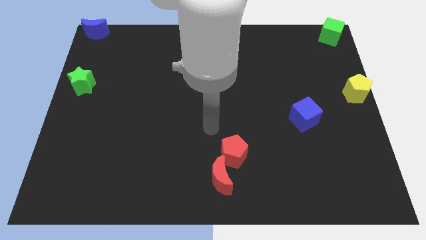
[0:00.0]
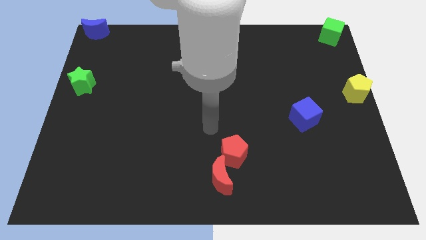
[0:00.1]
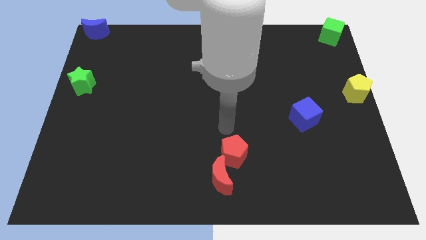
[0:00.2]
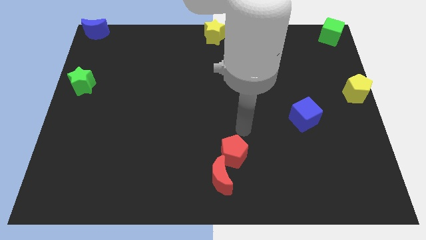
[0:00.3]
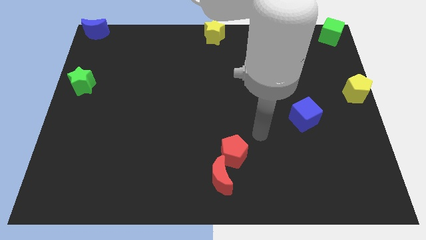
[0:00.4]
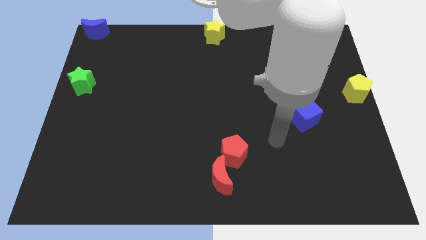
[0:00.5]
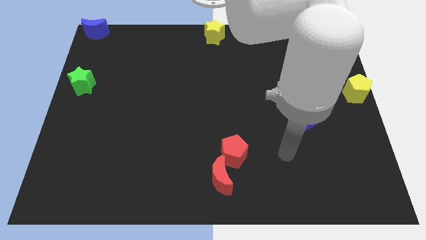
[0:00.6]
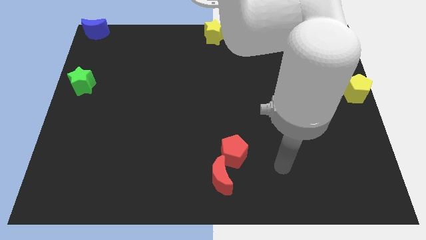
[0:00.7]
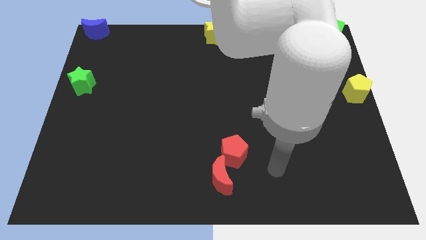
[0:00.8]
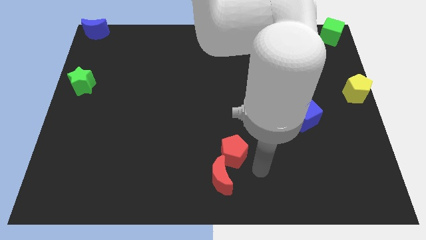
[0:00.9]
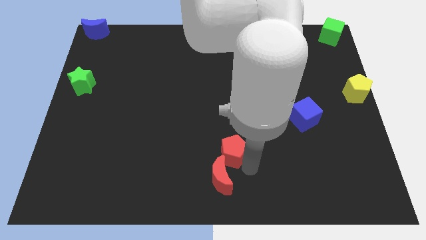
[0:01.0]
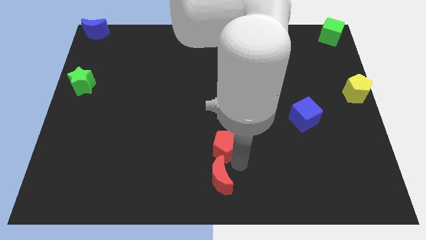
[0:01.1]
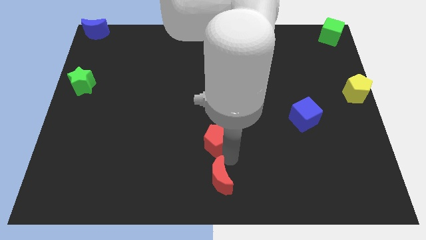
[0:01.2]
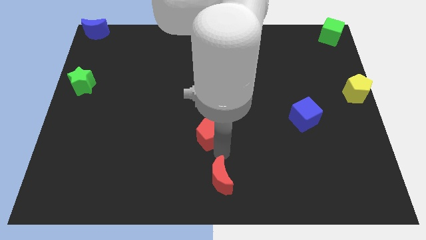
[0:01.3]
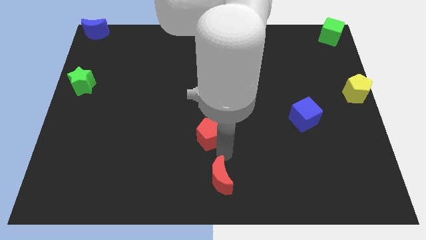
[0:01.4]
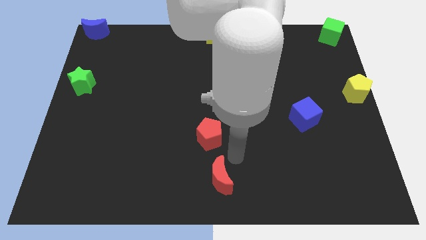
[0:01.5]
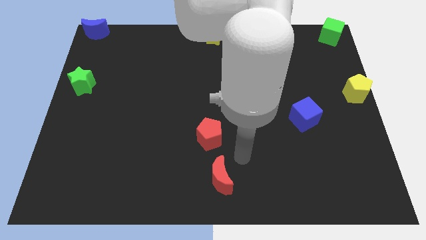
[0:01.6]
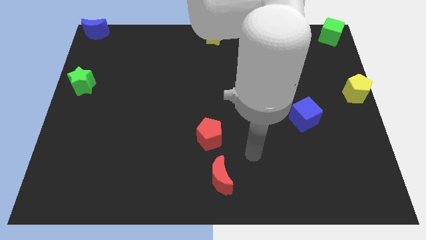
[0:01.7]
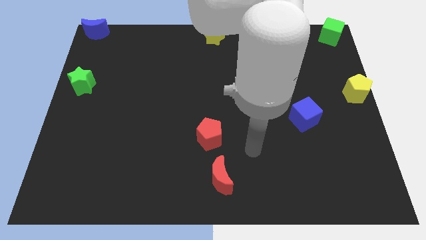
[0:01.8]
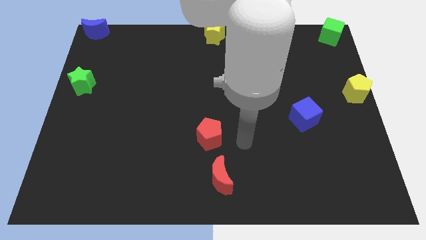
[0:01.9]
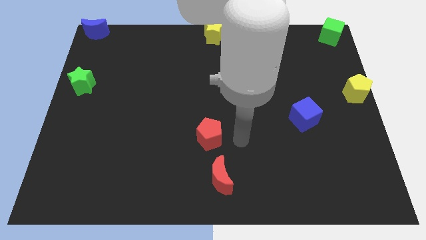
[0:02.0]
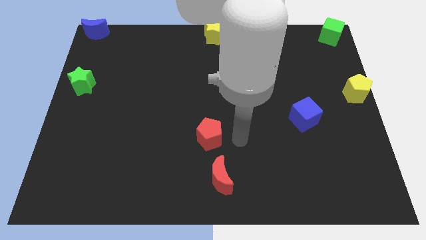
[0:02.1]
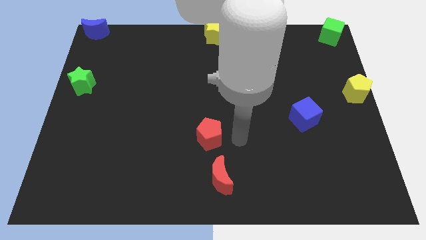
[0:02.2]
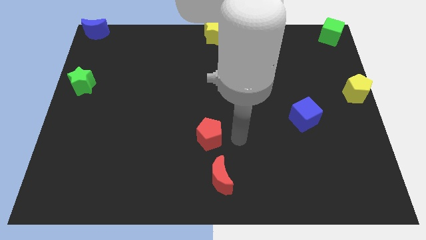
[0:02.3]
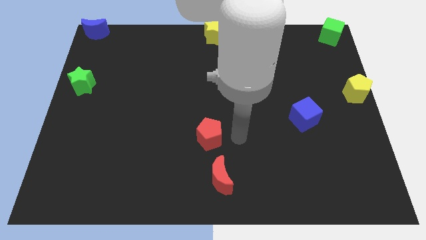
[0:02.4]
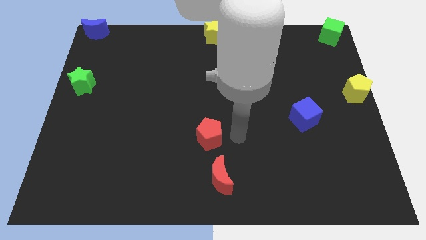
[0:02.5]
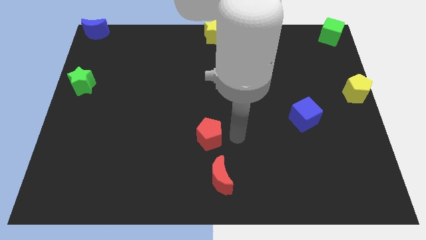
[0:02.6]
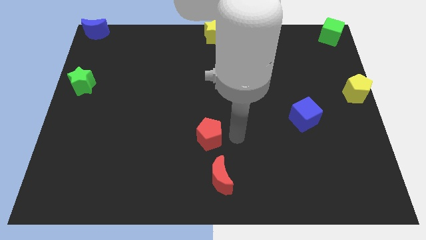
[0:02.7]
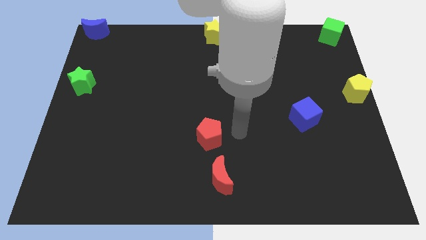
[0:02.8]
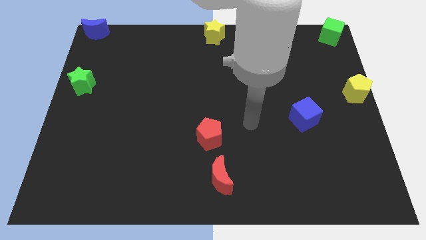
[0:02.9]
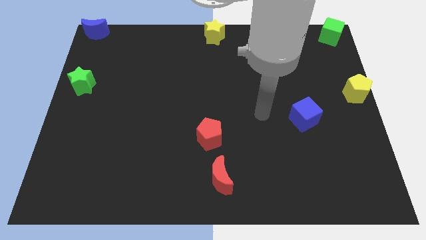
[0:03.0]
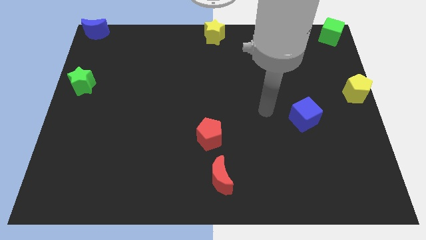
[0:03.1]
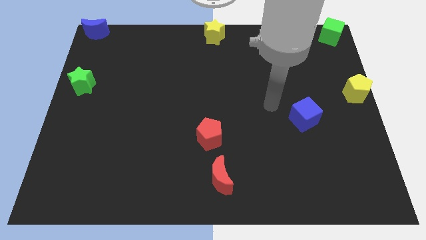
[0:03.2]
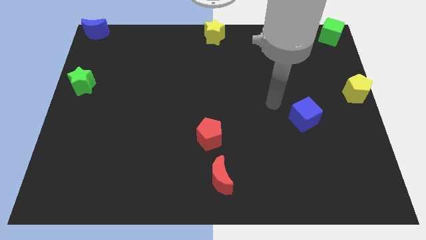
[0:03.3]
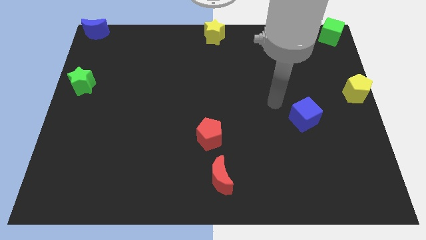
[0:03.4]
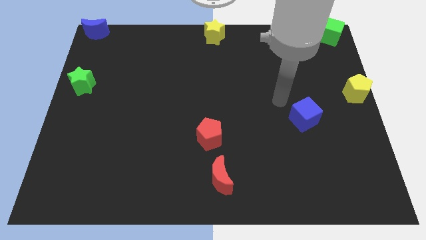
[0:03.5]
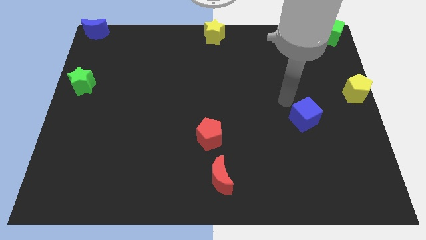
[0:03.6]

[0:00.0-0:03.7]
separate the red pentagon and red moon

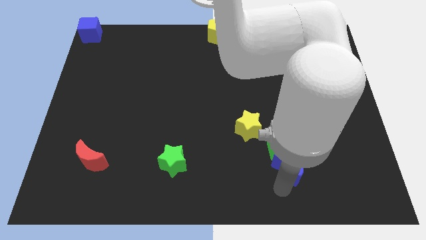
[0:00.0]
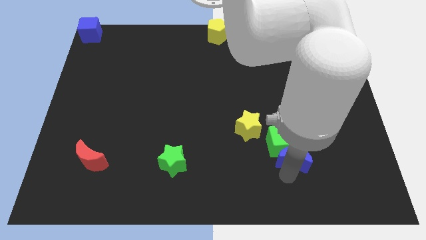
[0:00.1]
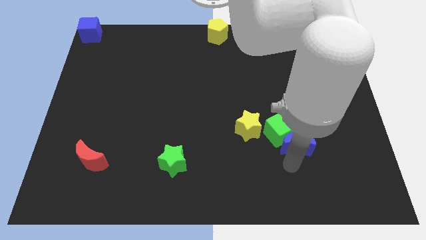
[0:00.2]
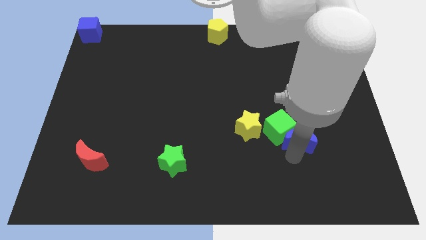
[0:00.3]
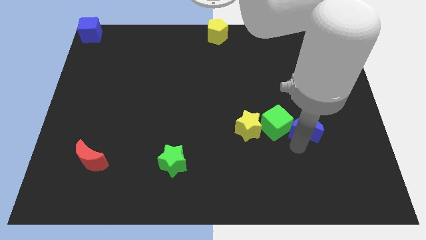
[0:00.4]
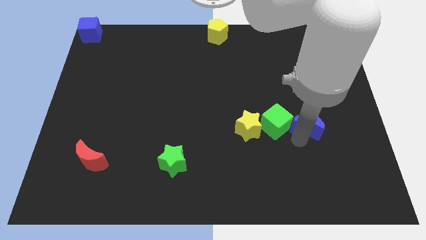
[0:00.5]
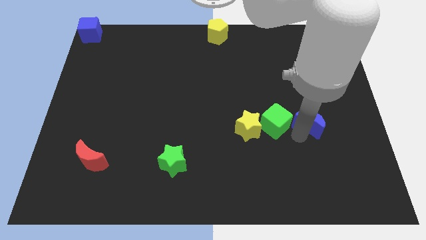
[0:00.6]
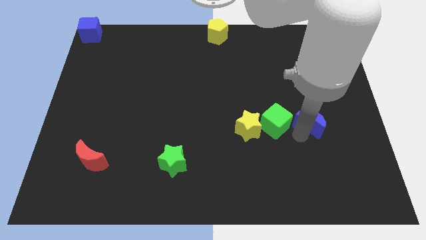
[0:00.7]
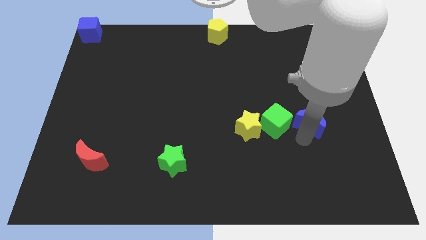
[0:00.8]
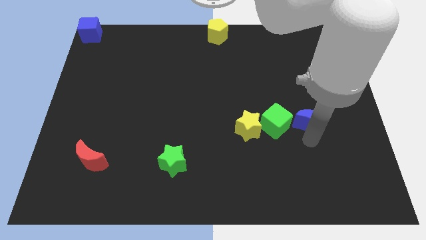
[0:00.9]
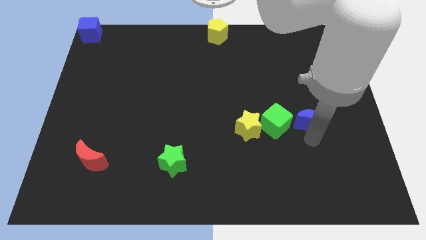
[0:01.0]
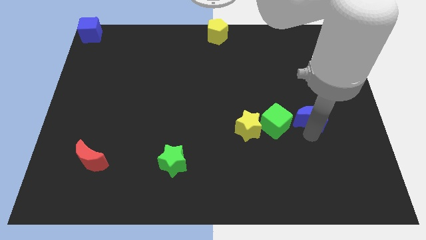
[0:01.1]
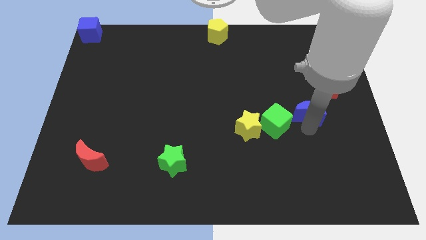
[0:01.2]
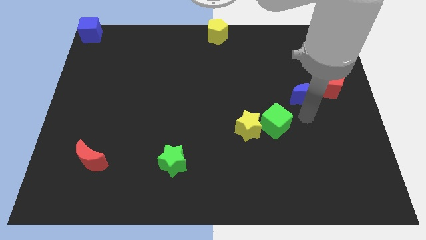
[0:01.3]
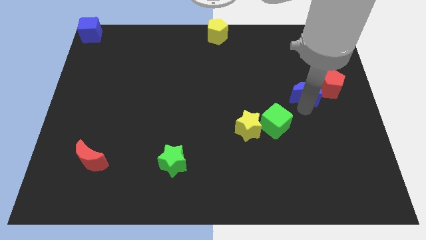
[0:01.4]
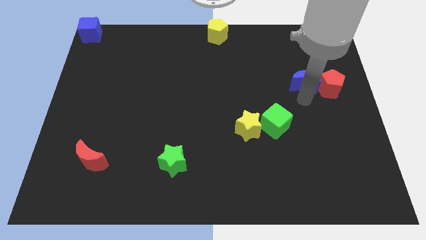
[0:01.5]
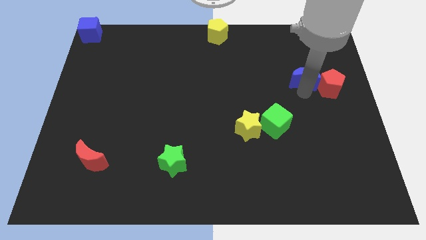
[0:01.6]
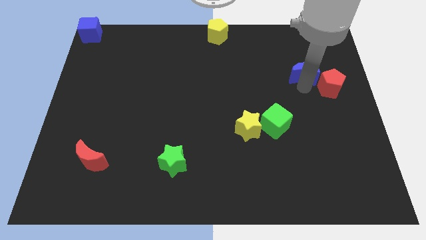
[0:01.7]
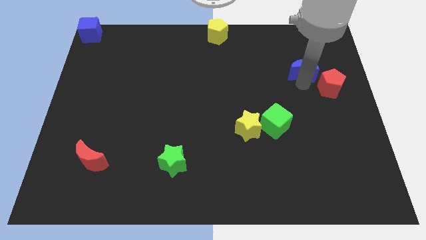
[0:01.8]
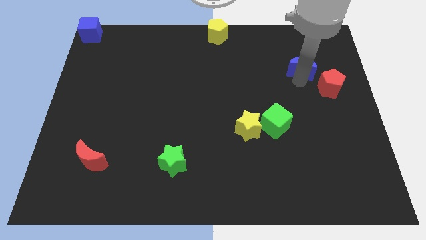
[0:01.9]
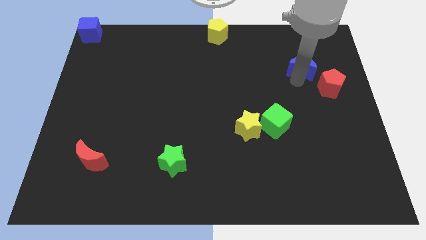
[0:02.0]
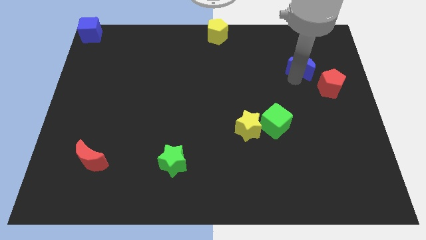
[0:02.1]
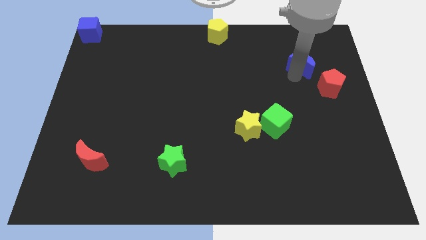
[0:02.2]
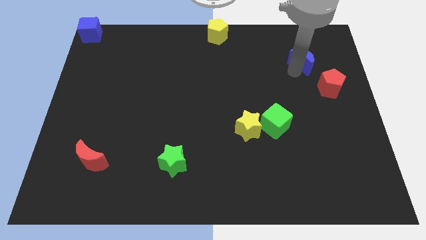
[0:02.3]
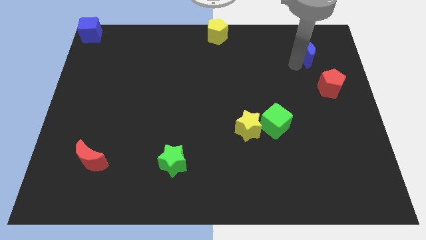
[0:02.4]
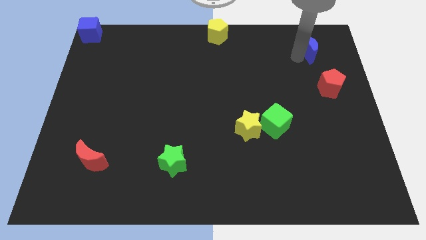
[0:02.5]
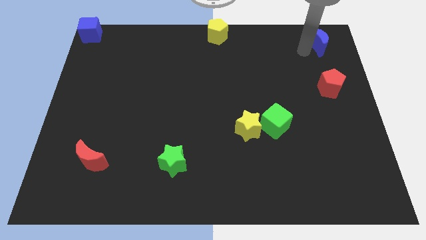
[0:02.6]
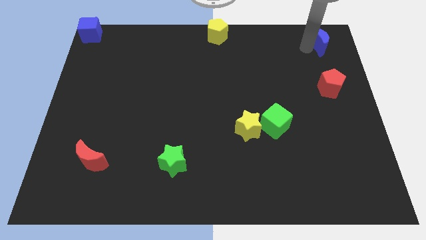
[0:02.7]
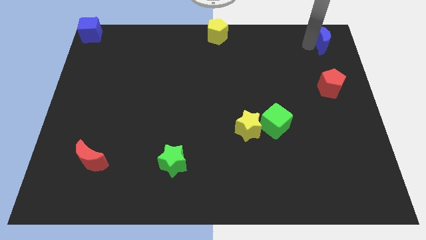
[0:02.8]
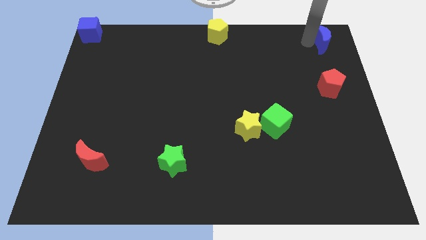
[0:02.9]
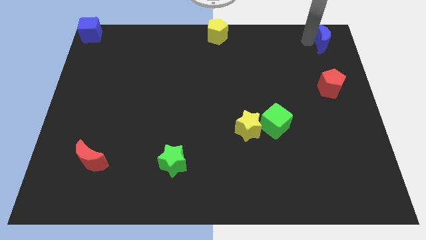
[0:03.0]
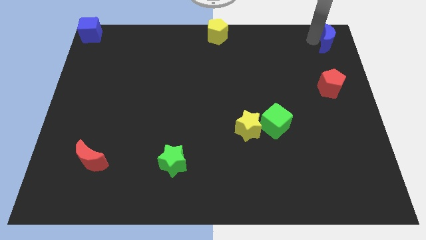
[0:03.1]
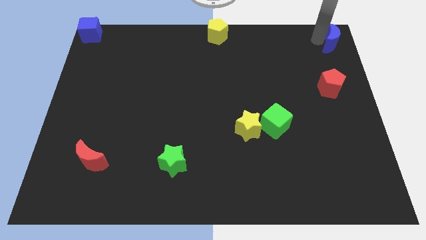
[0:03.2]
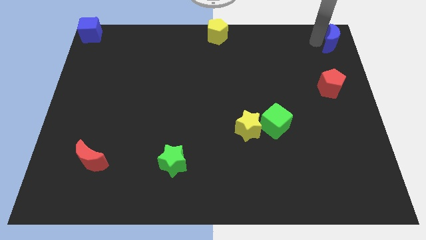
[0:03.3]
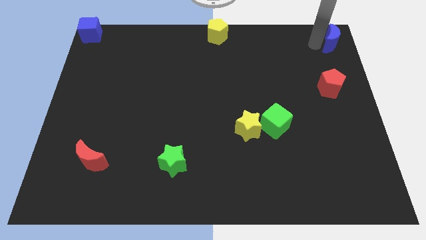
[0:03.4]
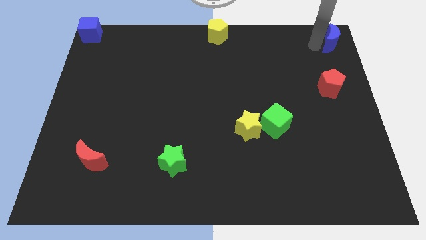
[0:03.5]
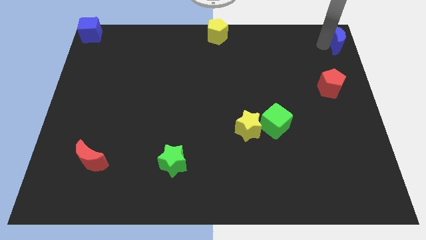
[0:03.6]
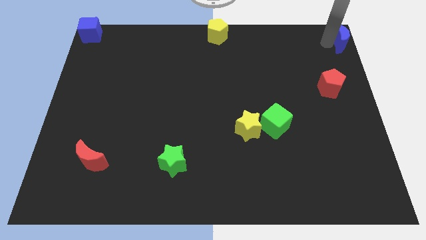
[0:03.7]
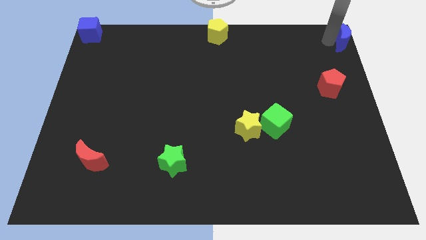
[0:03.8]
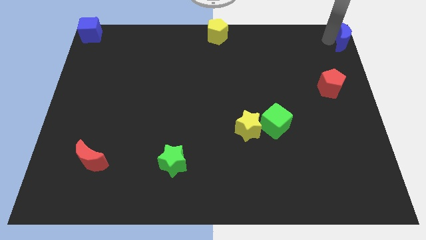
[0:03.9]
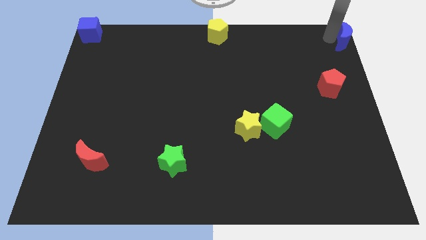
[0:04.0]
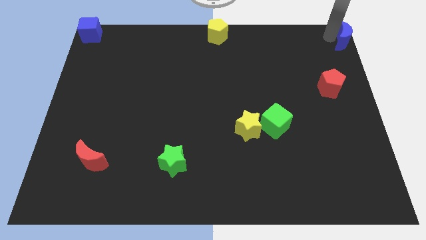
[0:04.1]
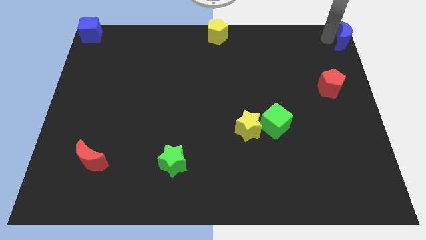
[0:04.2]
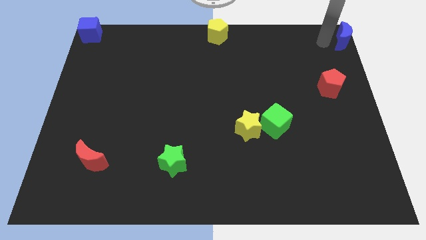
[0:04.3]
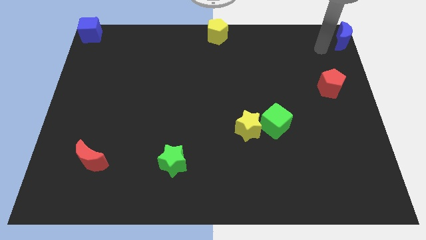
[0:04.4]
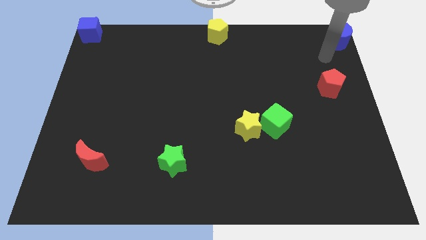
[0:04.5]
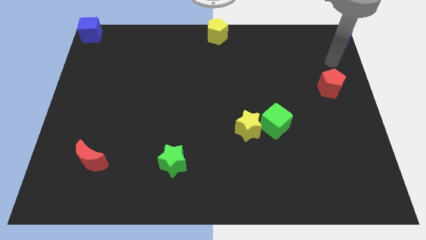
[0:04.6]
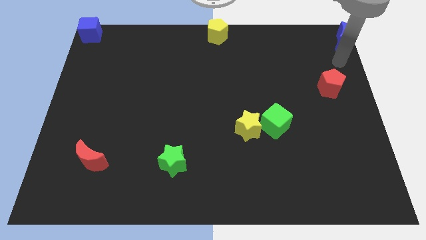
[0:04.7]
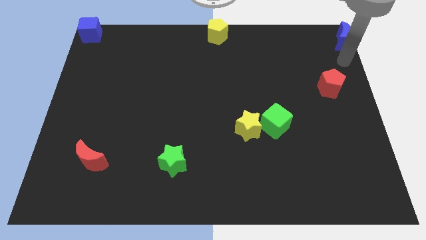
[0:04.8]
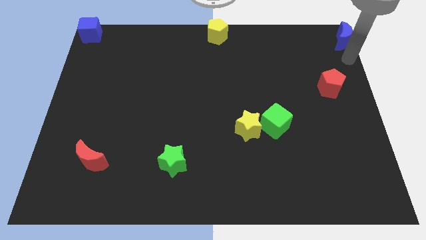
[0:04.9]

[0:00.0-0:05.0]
push the blue crescent to the top right of the board

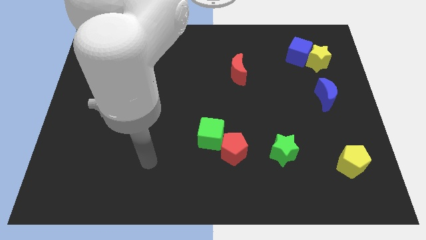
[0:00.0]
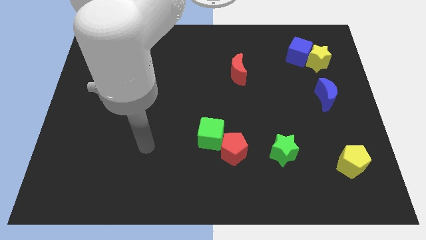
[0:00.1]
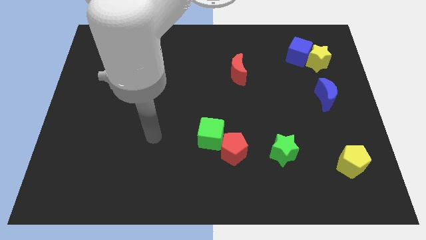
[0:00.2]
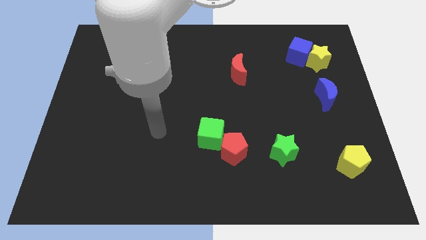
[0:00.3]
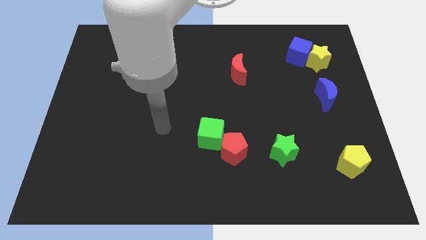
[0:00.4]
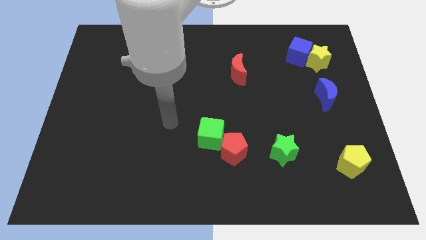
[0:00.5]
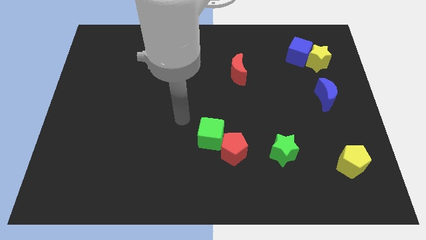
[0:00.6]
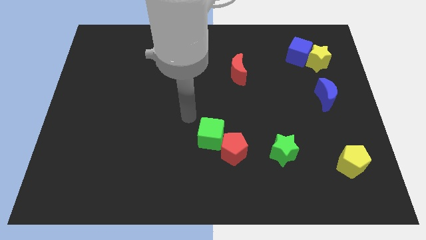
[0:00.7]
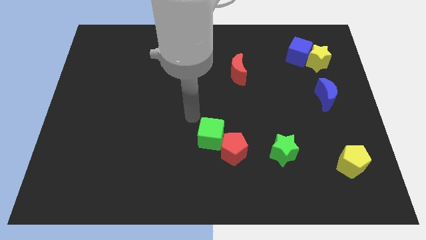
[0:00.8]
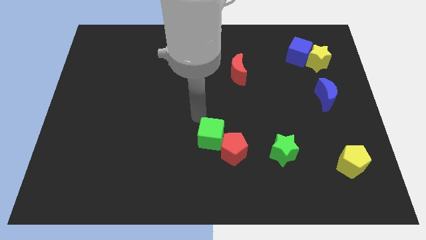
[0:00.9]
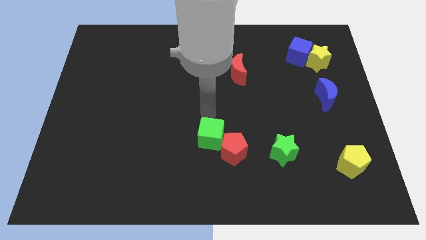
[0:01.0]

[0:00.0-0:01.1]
place the arm above the green cube
